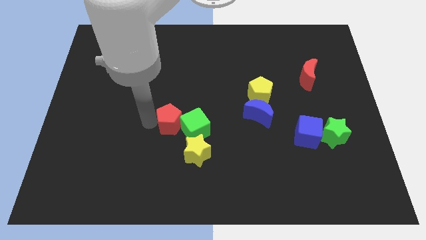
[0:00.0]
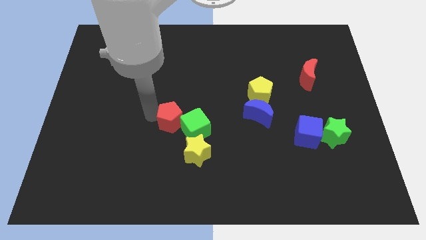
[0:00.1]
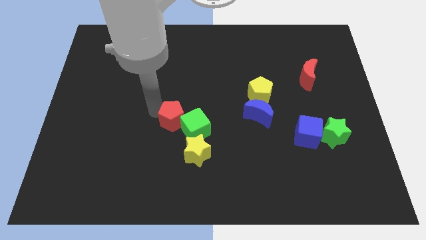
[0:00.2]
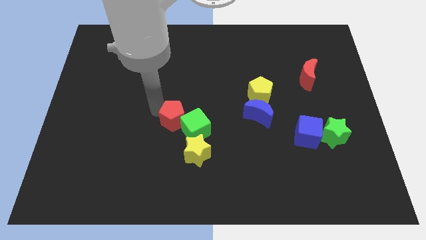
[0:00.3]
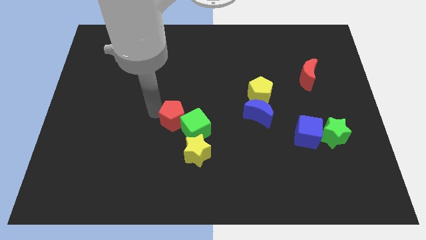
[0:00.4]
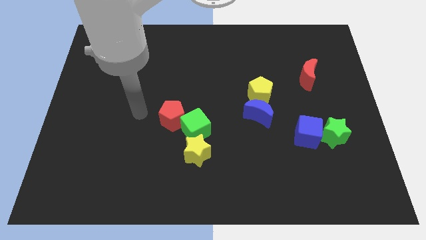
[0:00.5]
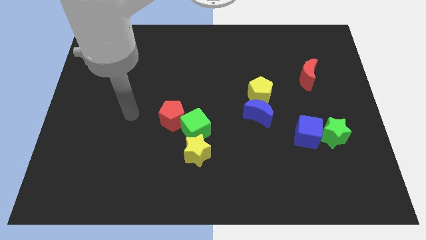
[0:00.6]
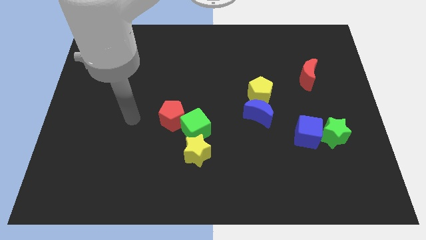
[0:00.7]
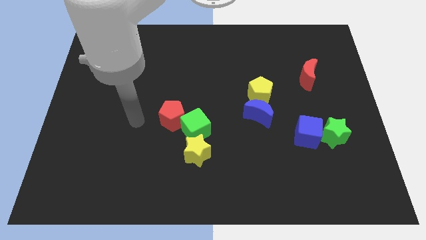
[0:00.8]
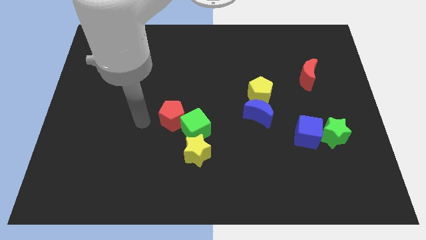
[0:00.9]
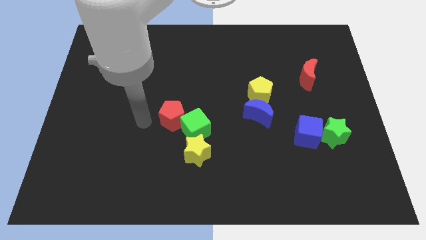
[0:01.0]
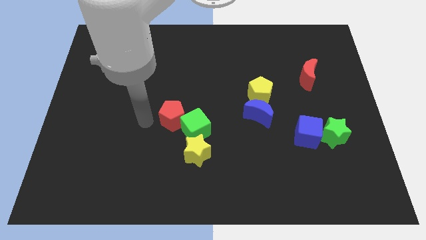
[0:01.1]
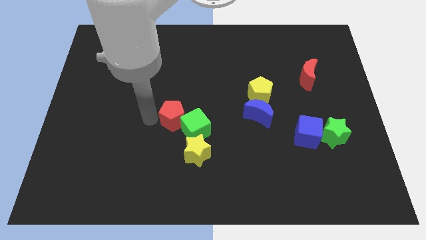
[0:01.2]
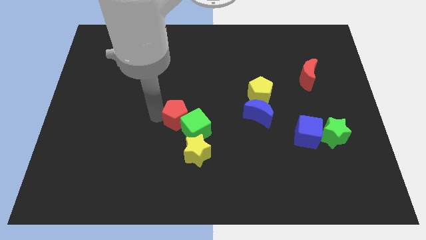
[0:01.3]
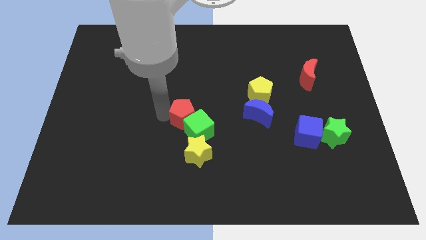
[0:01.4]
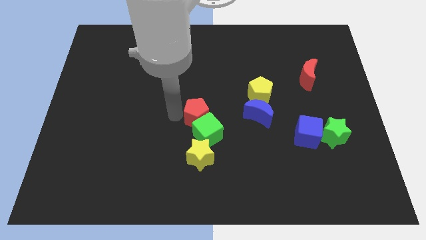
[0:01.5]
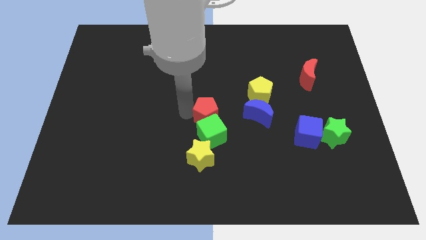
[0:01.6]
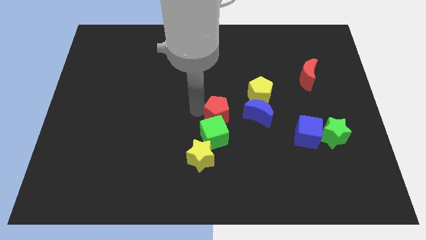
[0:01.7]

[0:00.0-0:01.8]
adjust the red pentagon vertically above the green cube

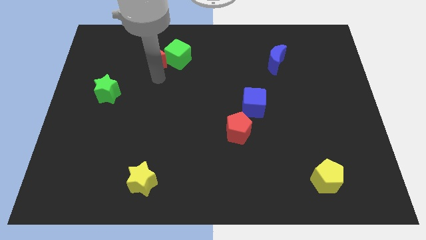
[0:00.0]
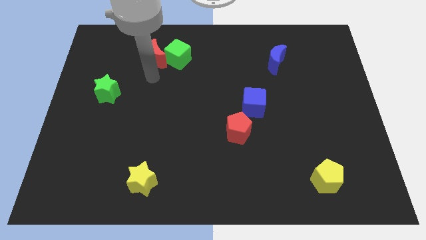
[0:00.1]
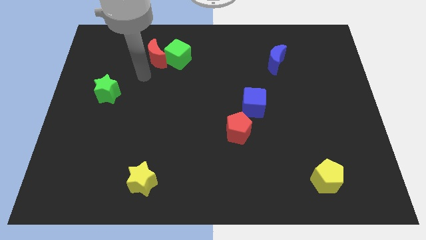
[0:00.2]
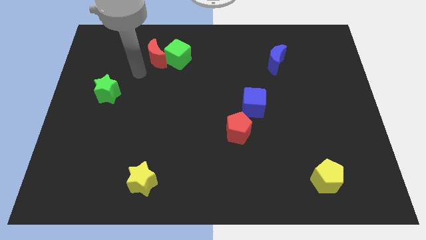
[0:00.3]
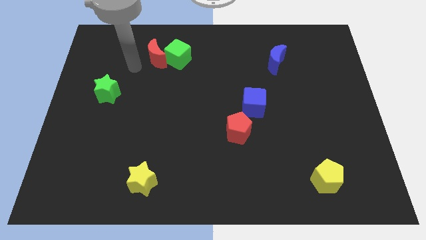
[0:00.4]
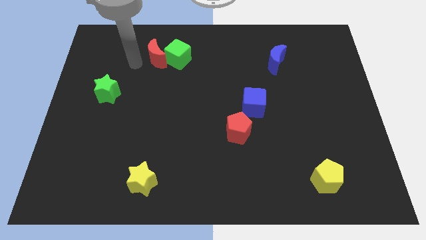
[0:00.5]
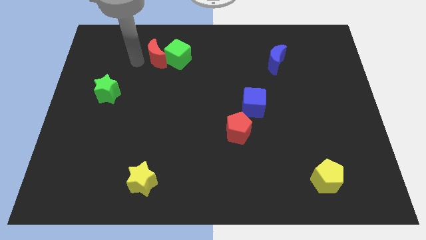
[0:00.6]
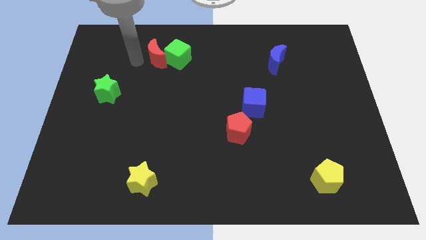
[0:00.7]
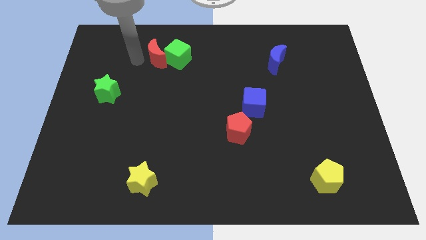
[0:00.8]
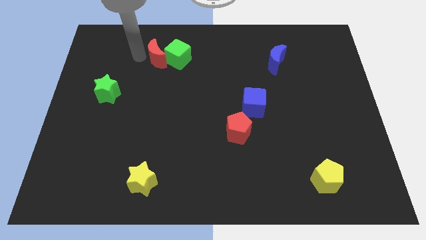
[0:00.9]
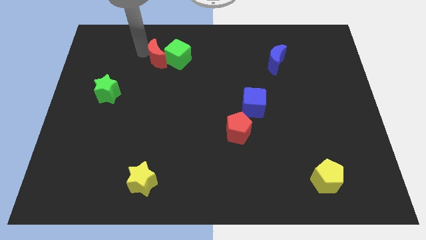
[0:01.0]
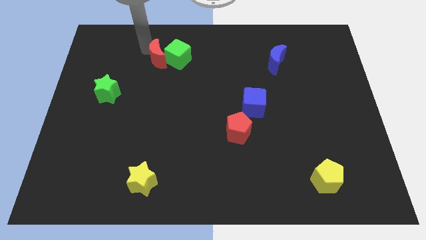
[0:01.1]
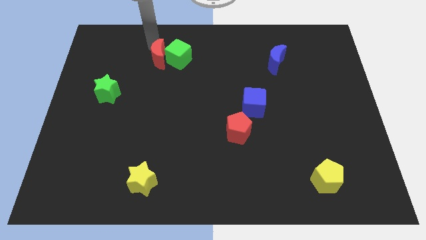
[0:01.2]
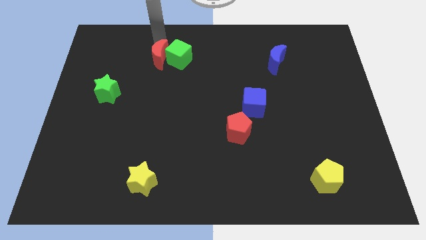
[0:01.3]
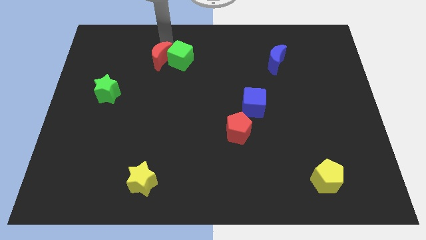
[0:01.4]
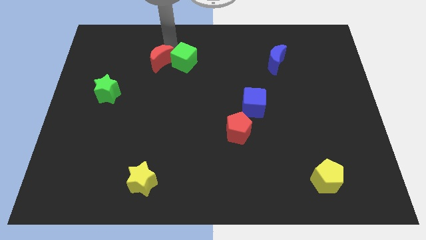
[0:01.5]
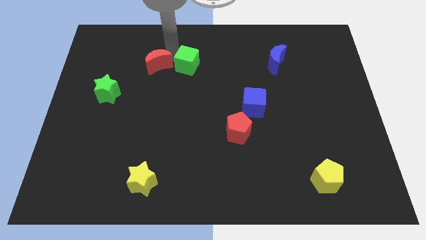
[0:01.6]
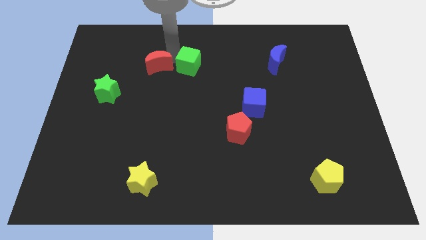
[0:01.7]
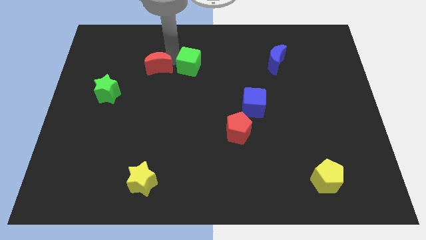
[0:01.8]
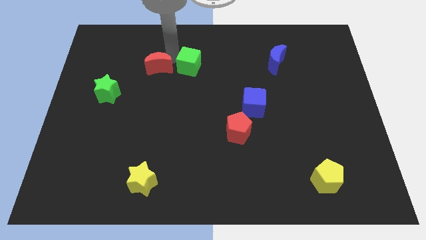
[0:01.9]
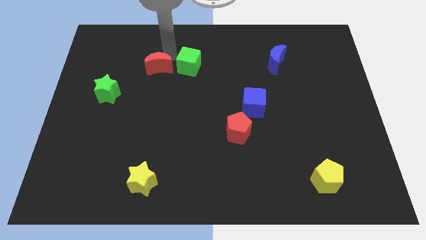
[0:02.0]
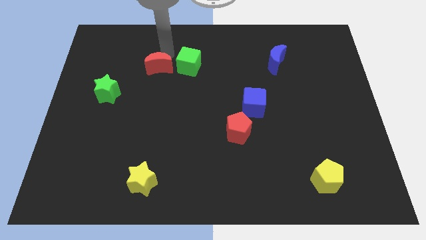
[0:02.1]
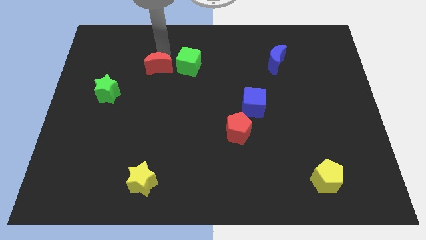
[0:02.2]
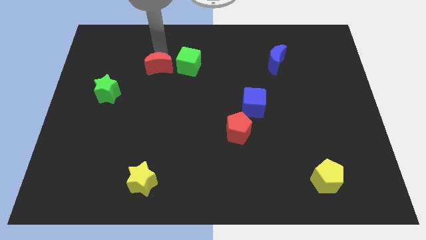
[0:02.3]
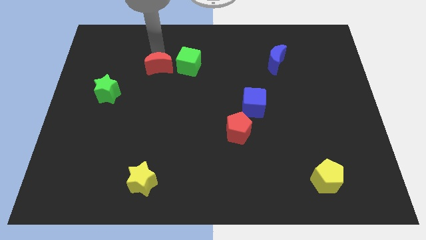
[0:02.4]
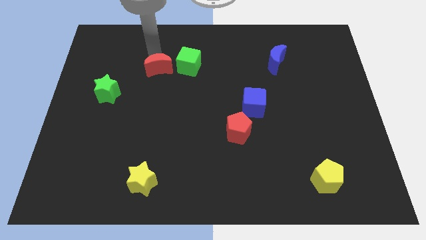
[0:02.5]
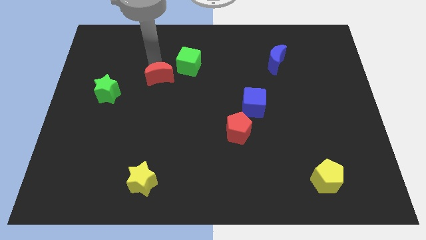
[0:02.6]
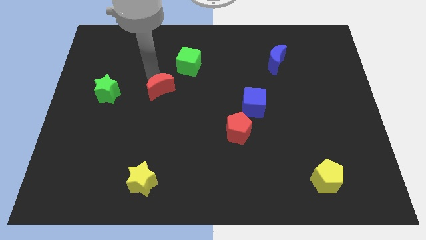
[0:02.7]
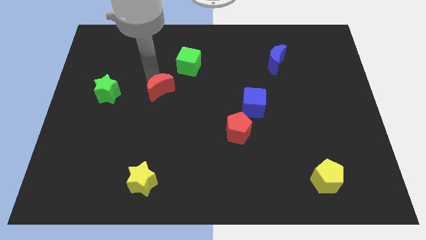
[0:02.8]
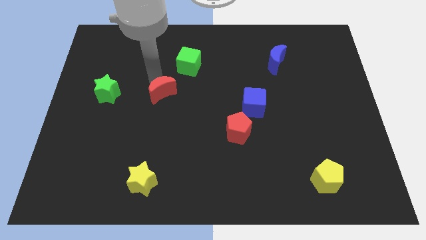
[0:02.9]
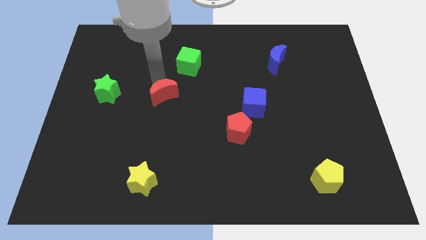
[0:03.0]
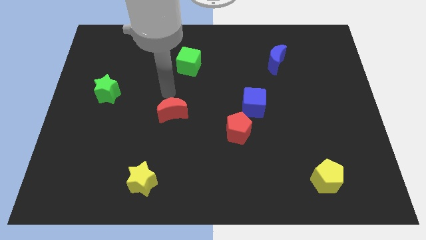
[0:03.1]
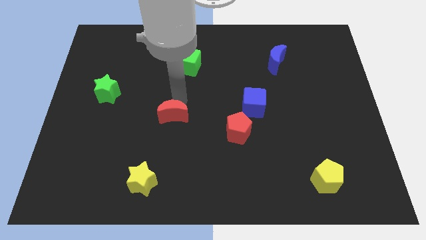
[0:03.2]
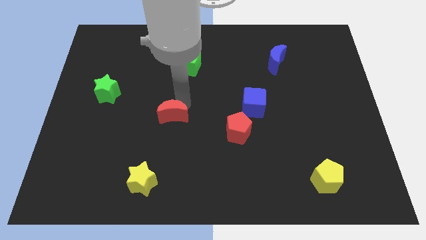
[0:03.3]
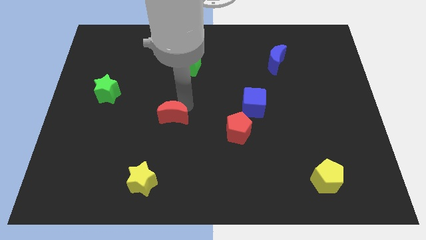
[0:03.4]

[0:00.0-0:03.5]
separate the red moon from the green cube

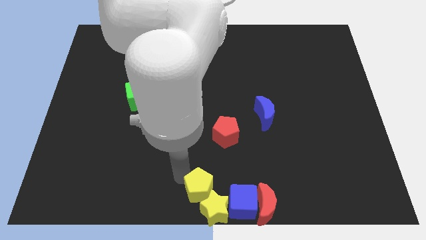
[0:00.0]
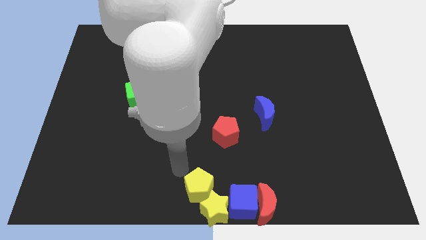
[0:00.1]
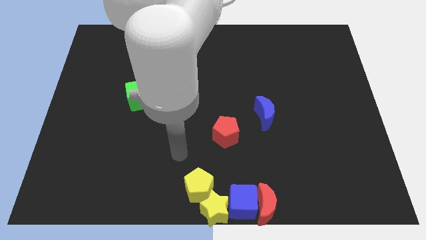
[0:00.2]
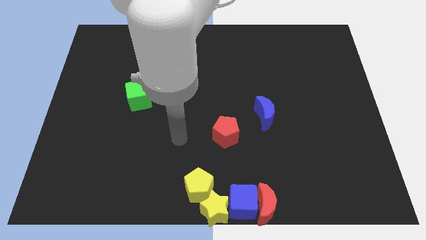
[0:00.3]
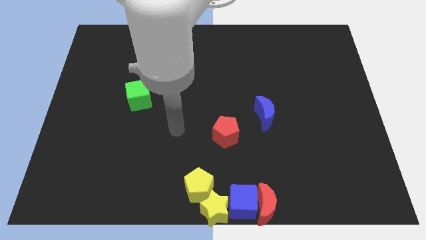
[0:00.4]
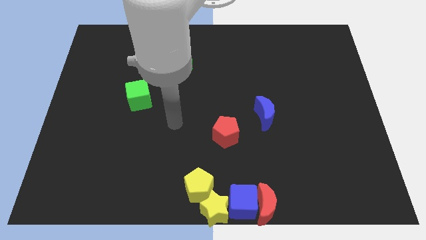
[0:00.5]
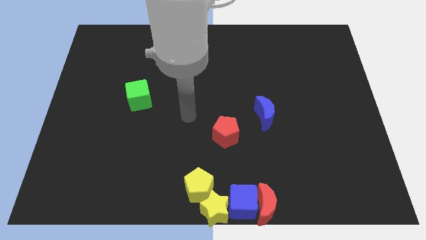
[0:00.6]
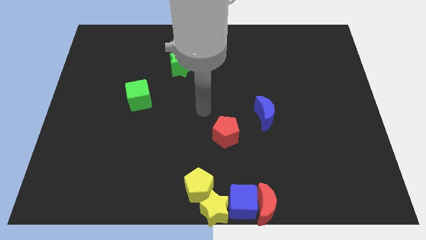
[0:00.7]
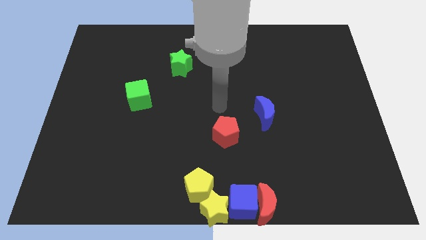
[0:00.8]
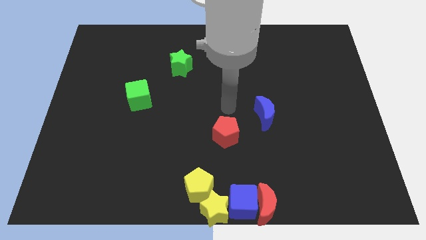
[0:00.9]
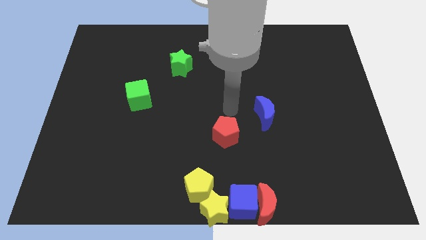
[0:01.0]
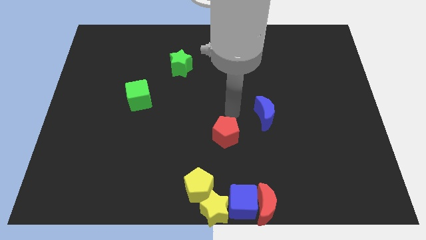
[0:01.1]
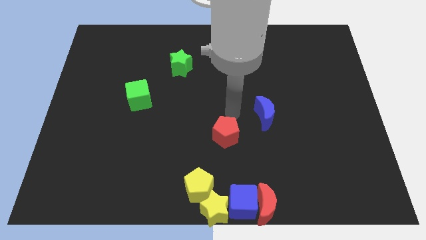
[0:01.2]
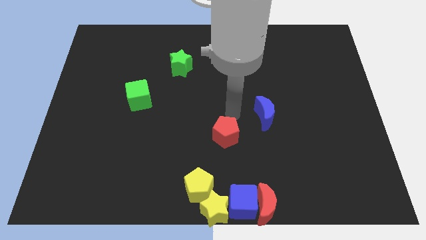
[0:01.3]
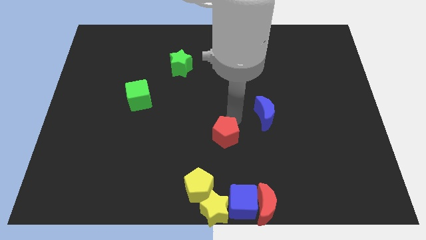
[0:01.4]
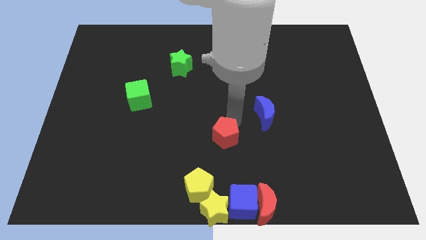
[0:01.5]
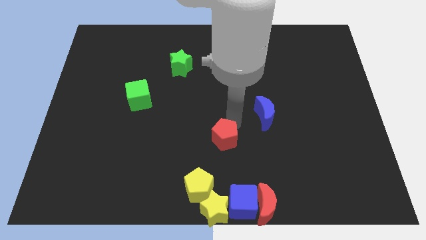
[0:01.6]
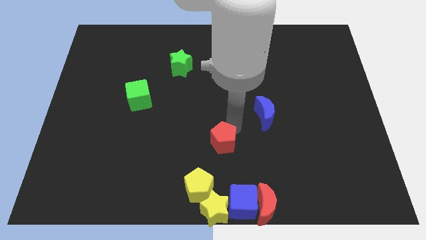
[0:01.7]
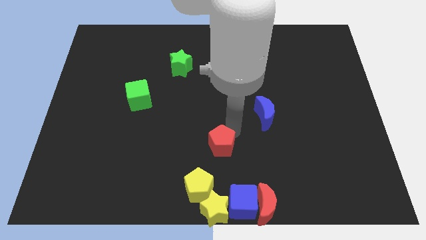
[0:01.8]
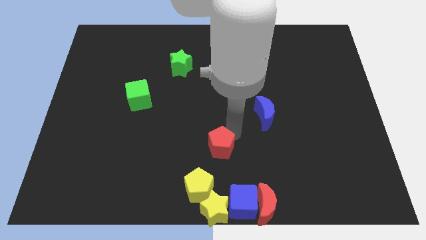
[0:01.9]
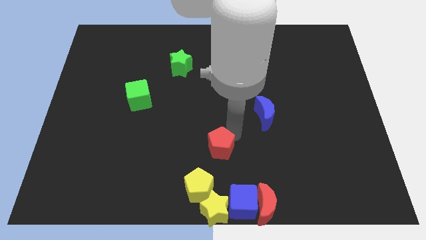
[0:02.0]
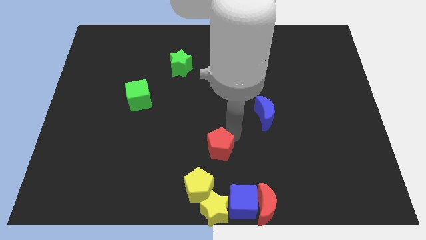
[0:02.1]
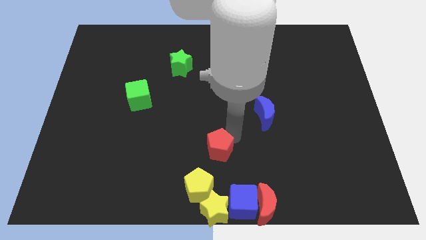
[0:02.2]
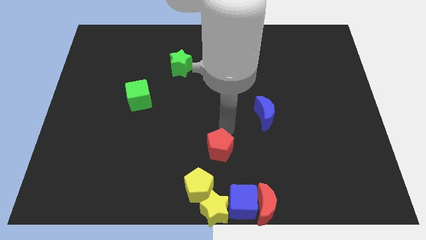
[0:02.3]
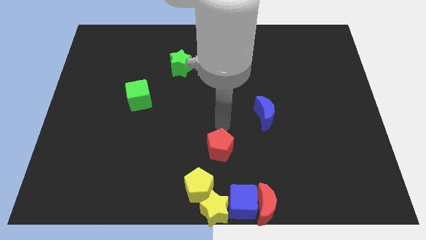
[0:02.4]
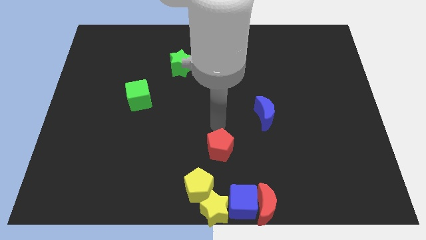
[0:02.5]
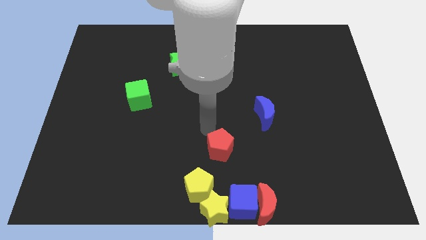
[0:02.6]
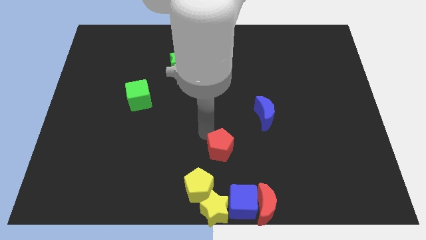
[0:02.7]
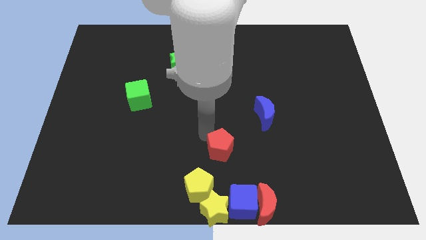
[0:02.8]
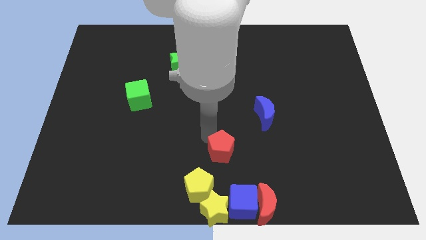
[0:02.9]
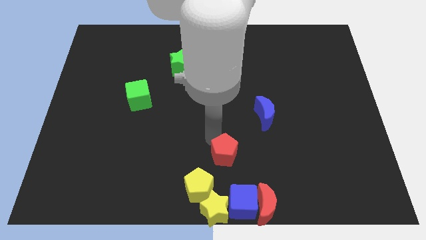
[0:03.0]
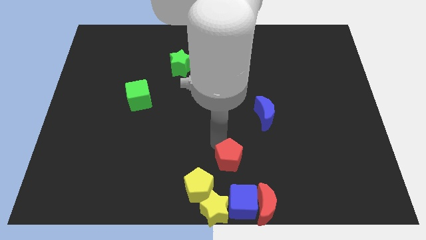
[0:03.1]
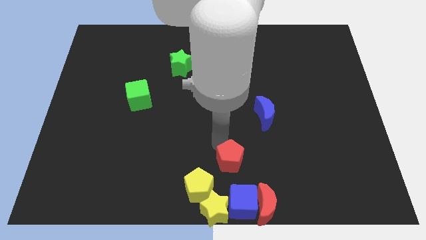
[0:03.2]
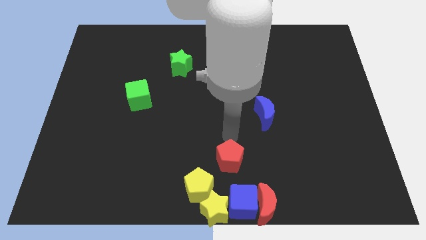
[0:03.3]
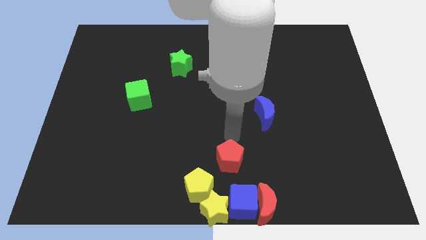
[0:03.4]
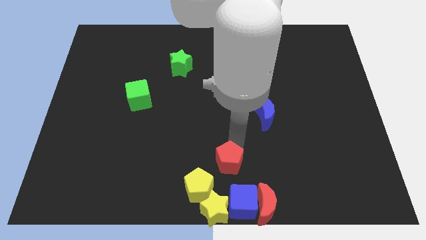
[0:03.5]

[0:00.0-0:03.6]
push the red pentagon towards the yellow pentagon
